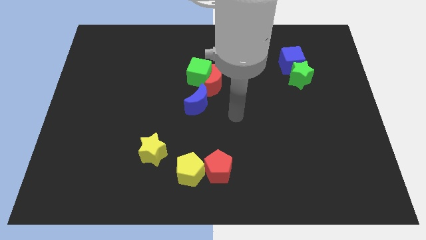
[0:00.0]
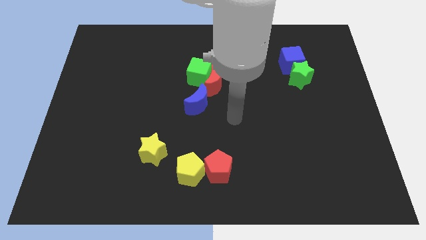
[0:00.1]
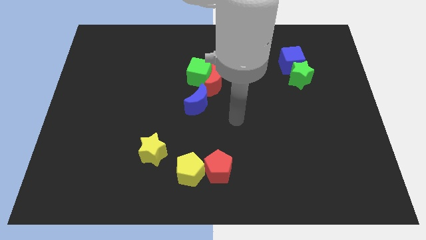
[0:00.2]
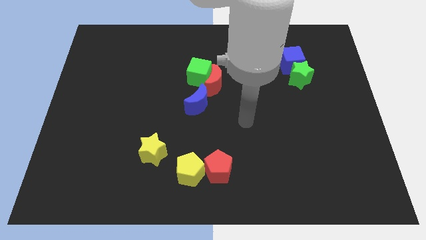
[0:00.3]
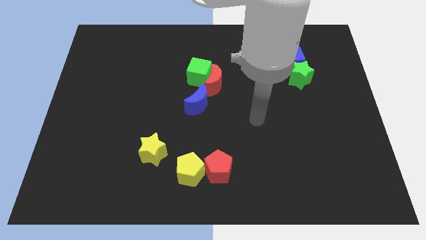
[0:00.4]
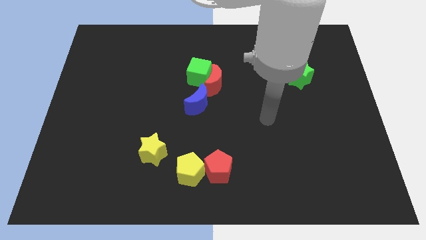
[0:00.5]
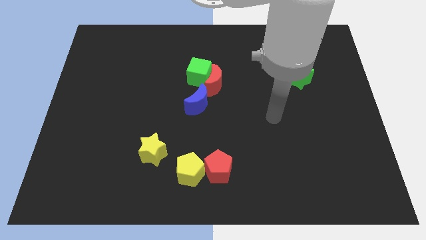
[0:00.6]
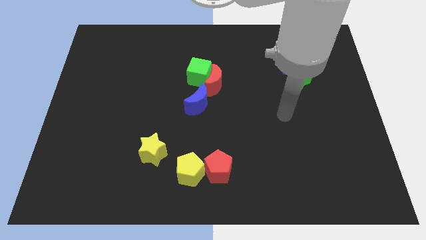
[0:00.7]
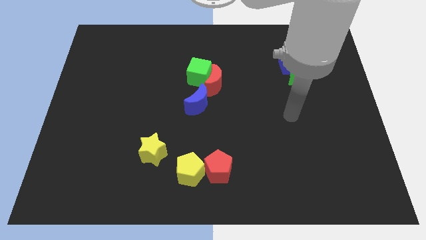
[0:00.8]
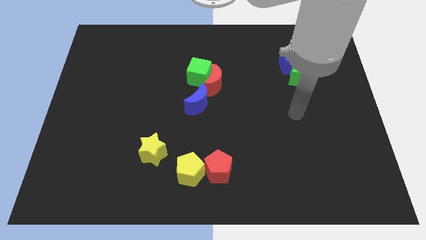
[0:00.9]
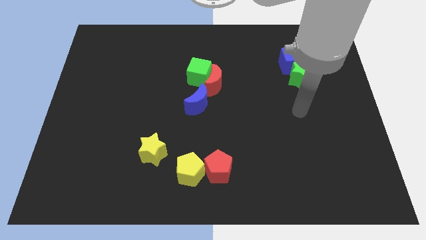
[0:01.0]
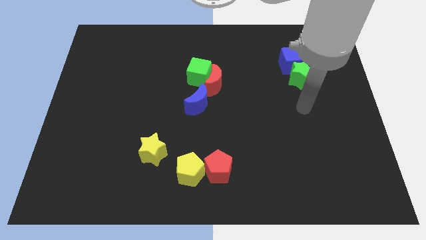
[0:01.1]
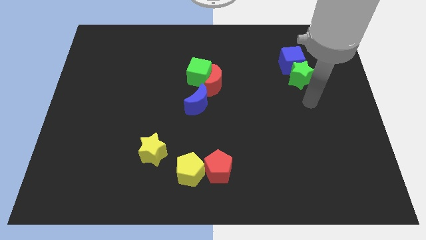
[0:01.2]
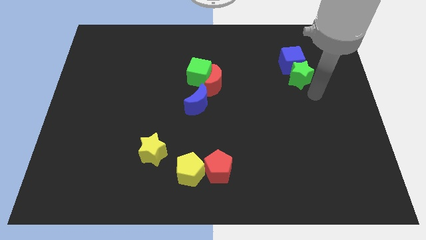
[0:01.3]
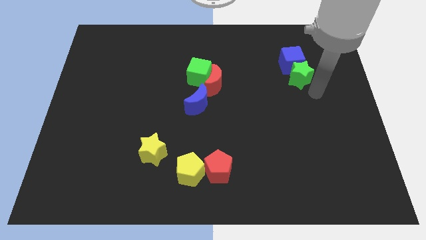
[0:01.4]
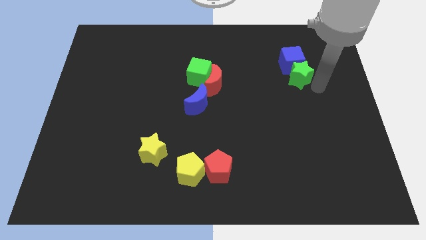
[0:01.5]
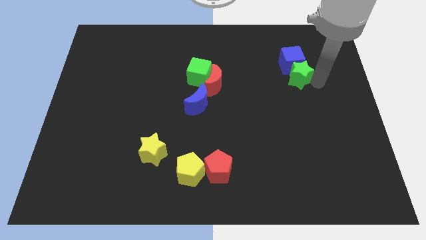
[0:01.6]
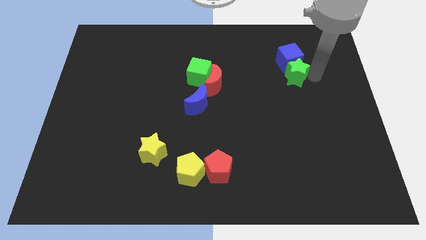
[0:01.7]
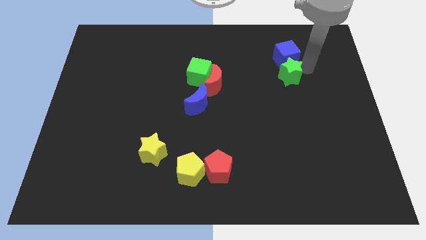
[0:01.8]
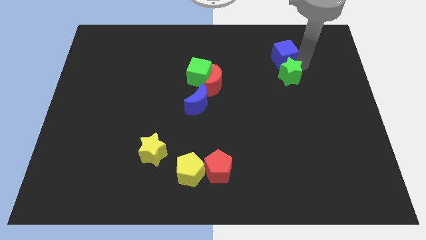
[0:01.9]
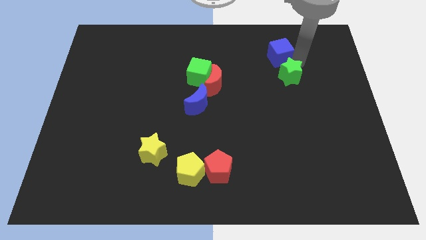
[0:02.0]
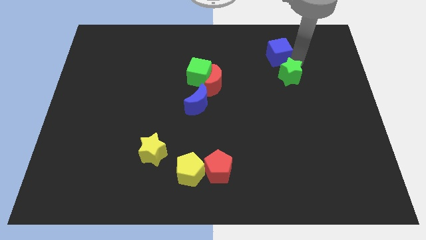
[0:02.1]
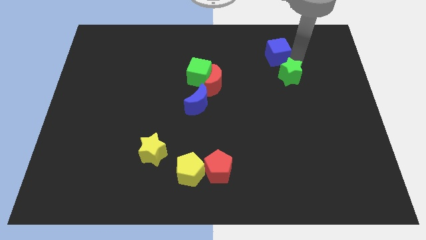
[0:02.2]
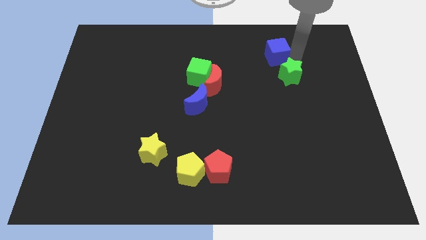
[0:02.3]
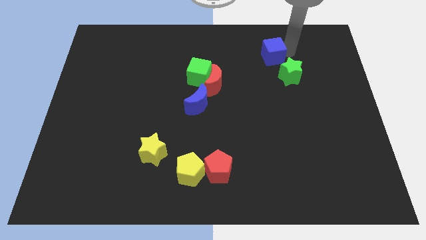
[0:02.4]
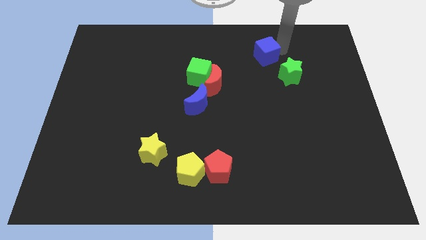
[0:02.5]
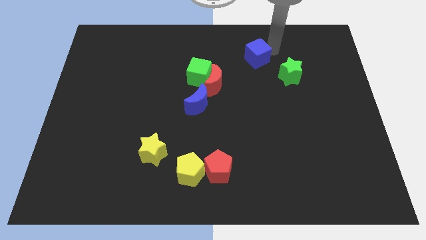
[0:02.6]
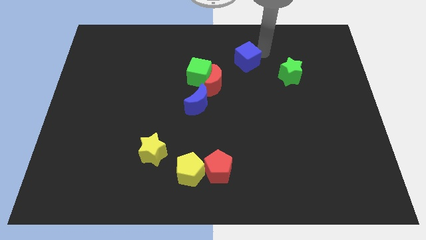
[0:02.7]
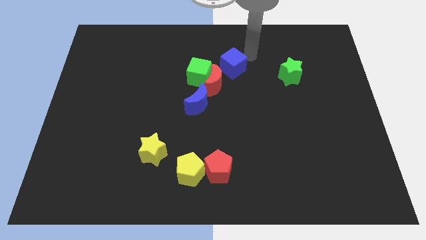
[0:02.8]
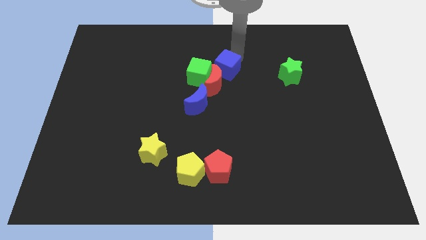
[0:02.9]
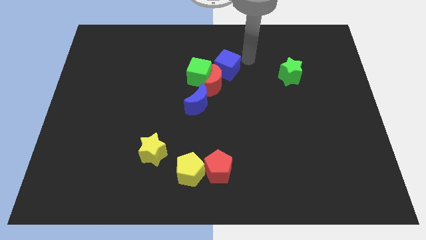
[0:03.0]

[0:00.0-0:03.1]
push blue cube to the top of red crescent

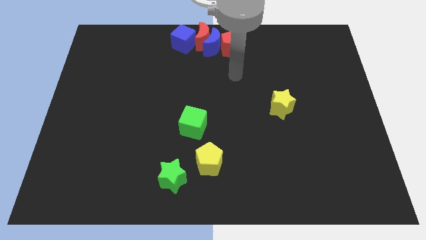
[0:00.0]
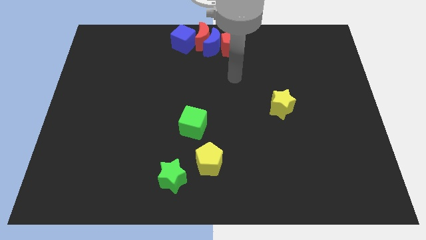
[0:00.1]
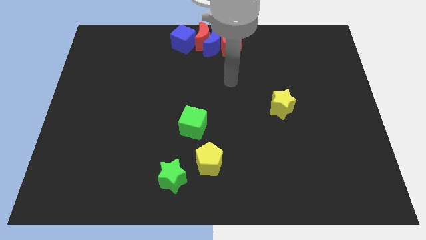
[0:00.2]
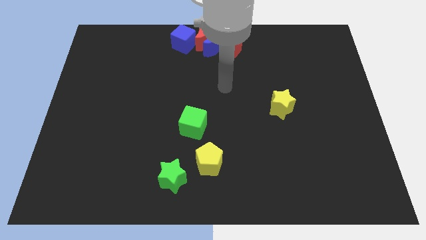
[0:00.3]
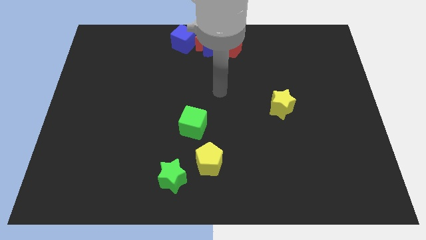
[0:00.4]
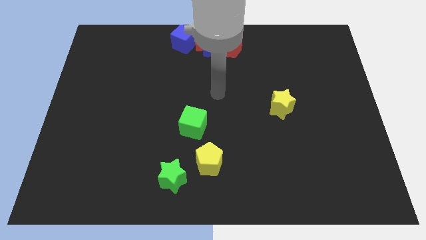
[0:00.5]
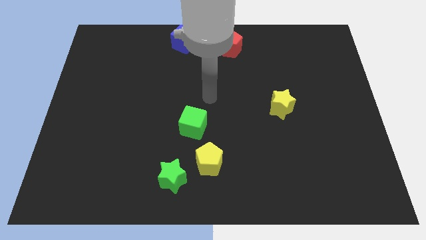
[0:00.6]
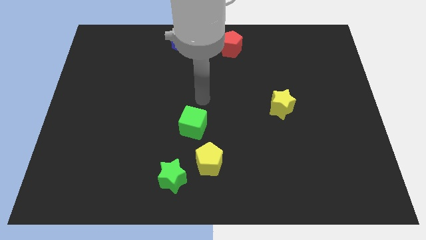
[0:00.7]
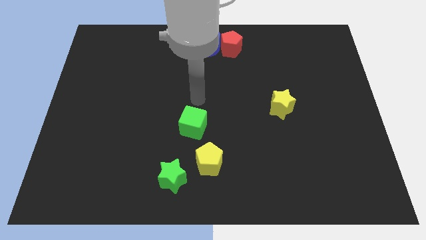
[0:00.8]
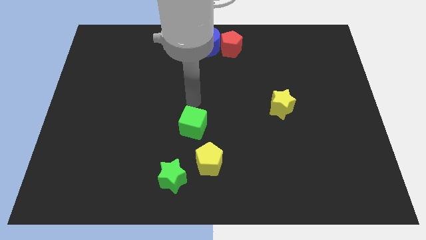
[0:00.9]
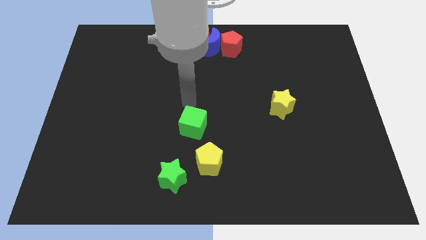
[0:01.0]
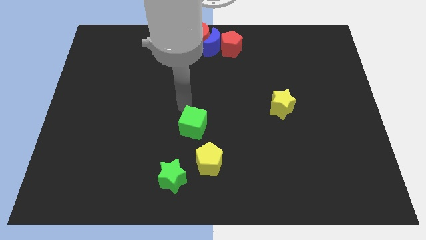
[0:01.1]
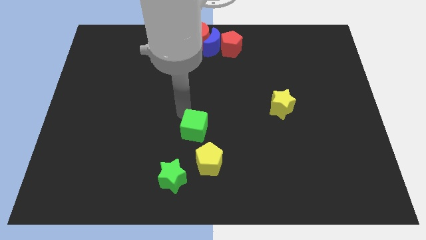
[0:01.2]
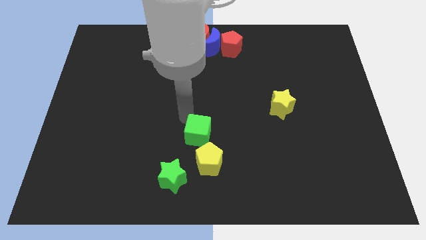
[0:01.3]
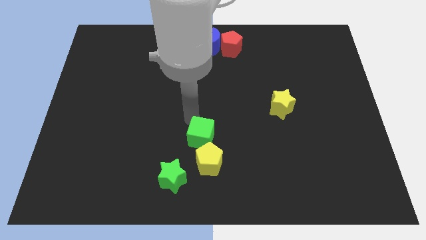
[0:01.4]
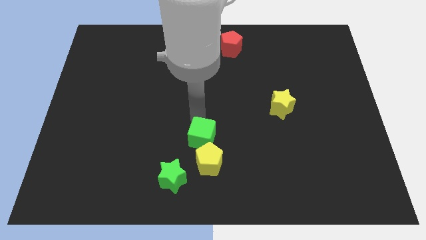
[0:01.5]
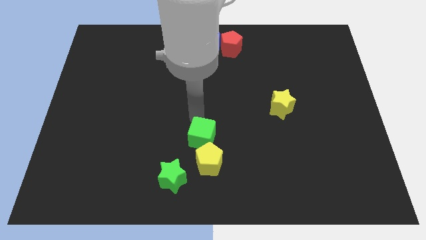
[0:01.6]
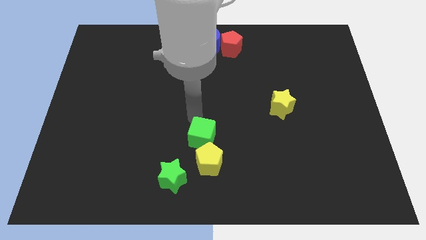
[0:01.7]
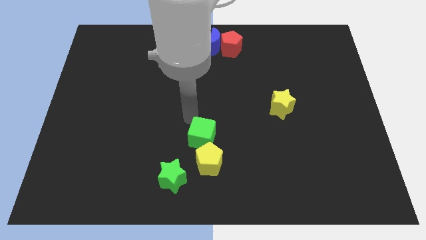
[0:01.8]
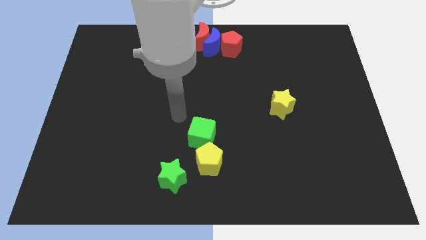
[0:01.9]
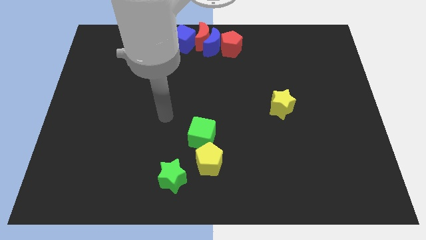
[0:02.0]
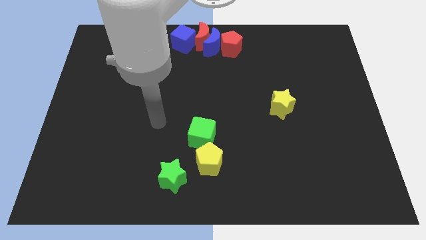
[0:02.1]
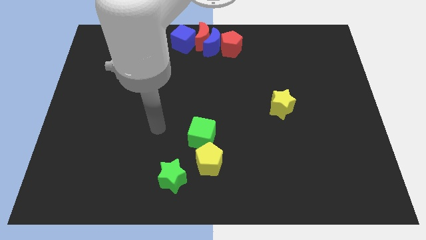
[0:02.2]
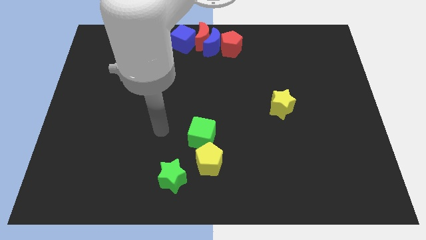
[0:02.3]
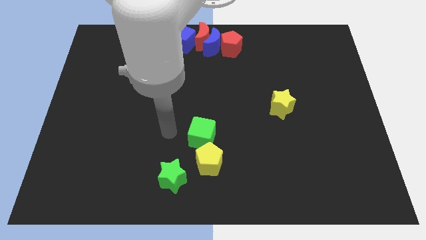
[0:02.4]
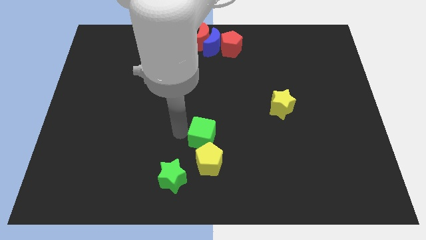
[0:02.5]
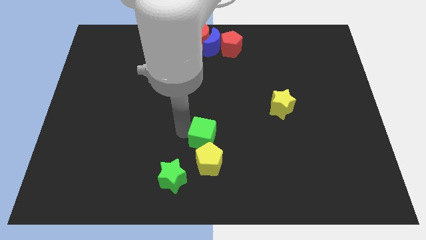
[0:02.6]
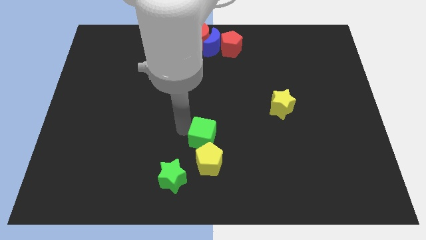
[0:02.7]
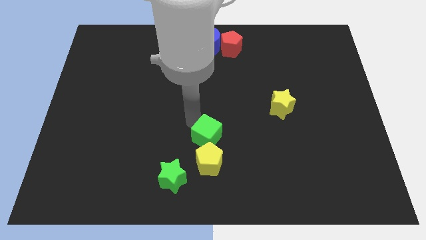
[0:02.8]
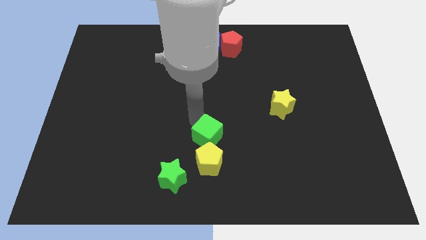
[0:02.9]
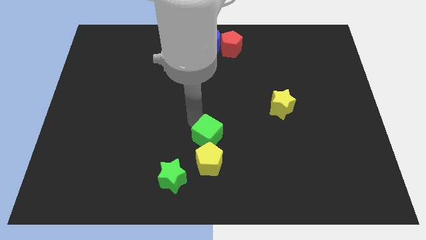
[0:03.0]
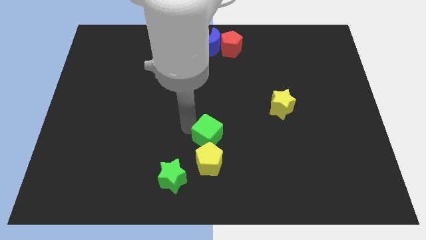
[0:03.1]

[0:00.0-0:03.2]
place green cube above yellow pentagon

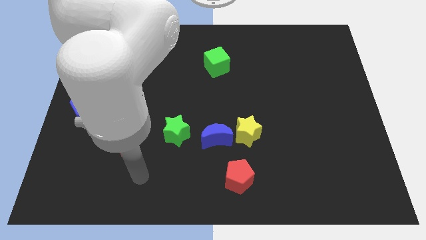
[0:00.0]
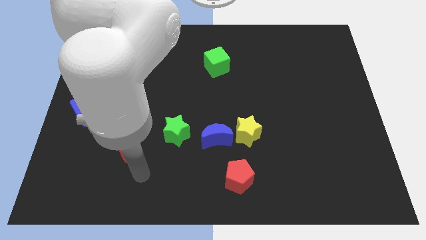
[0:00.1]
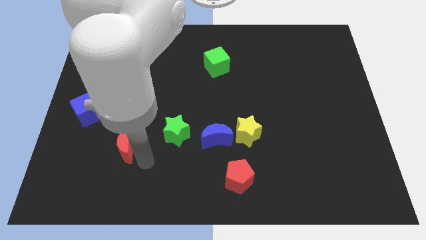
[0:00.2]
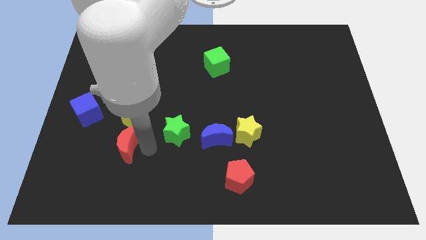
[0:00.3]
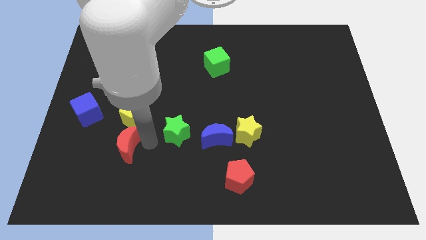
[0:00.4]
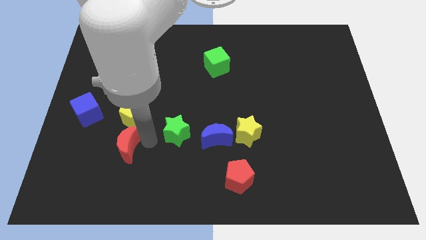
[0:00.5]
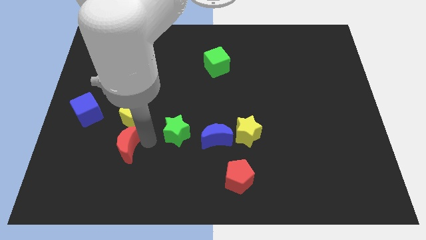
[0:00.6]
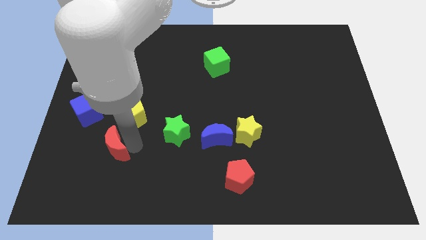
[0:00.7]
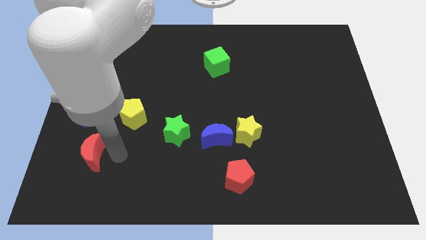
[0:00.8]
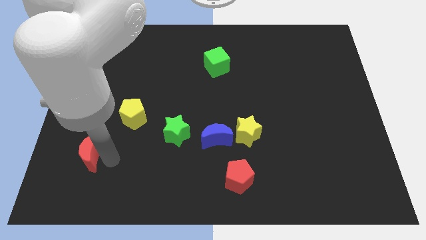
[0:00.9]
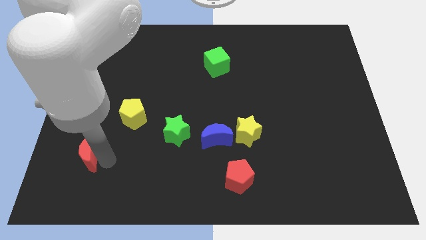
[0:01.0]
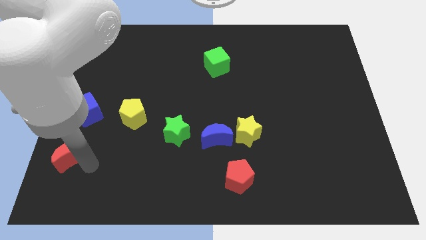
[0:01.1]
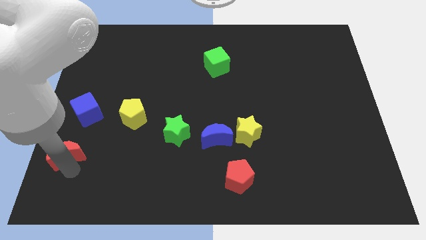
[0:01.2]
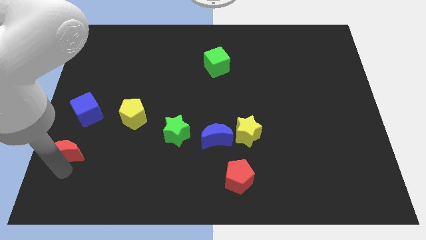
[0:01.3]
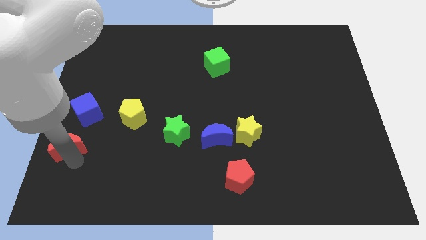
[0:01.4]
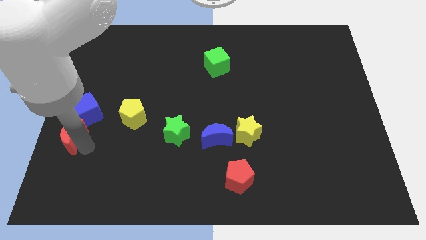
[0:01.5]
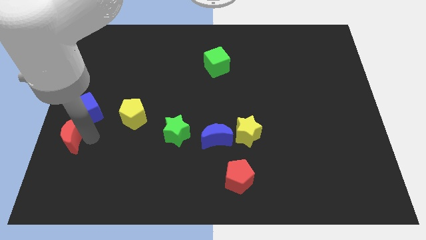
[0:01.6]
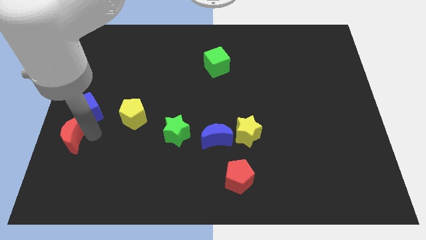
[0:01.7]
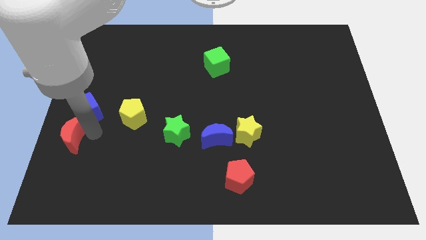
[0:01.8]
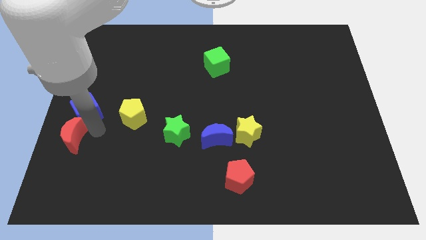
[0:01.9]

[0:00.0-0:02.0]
move the red crescent to the bottom side of the blue cube

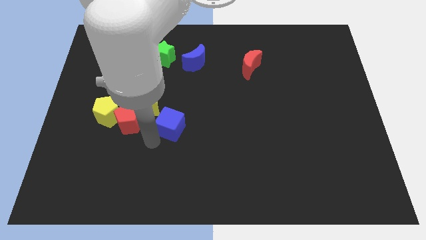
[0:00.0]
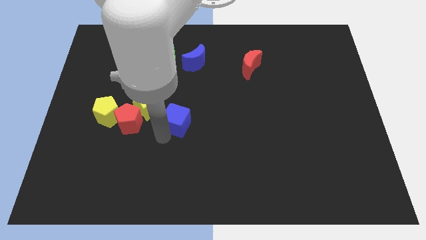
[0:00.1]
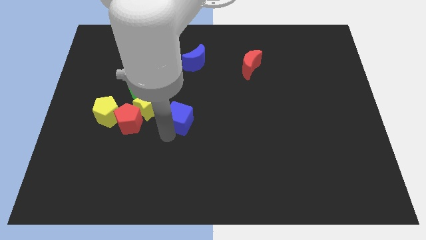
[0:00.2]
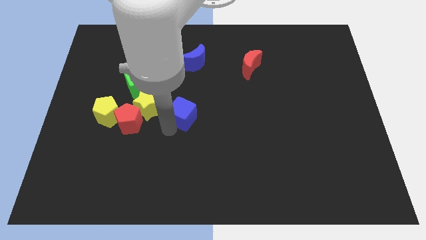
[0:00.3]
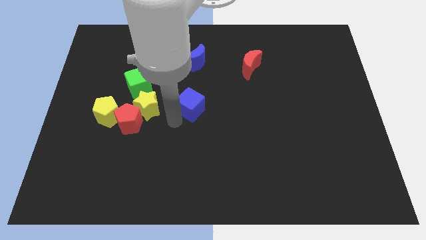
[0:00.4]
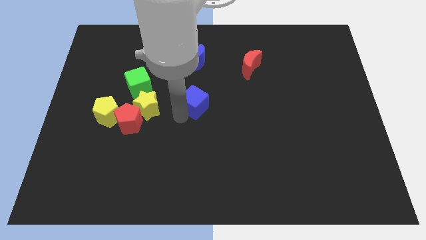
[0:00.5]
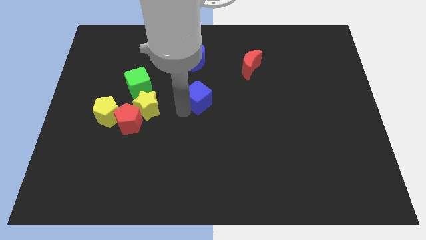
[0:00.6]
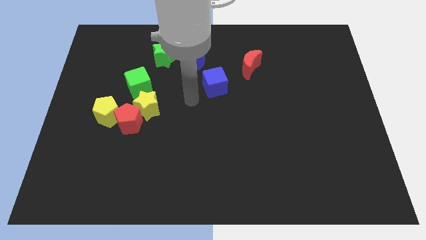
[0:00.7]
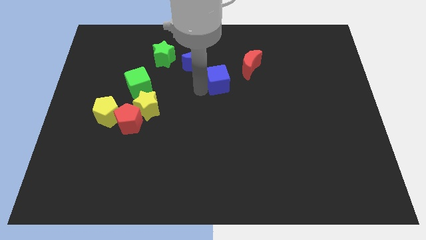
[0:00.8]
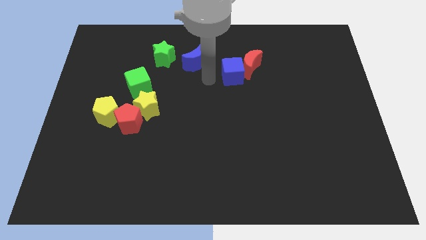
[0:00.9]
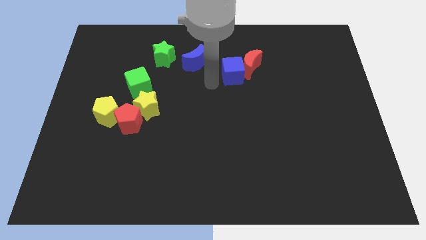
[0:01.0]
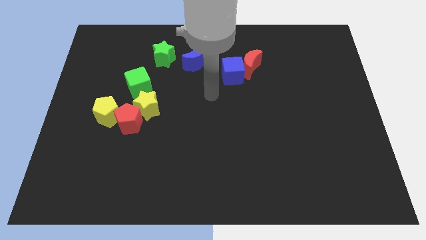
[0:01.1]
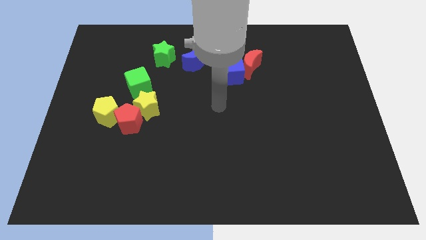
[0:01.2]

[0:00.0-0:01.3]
push the blue block into the red moon
